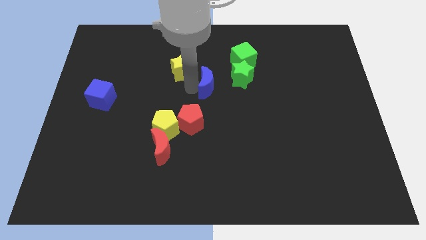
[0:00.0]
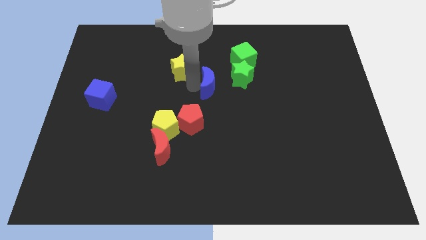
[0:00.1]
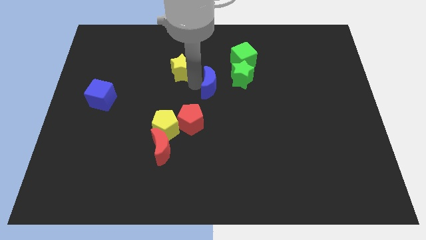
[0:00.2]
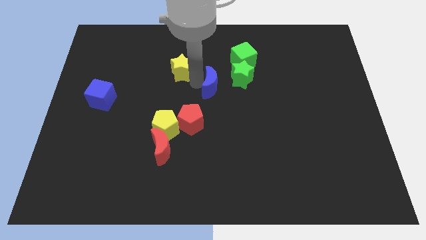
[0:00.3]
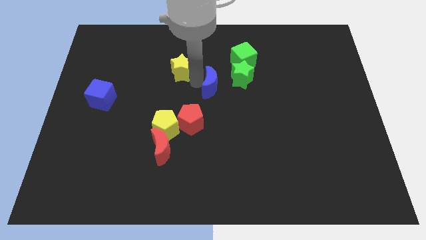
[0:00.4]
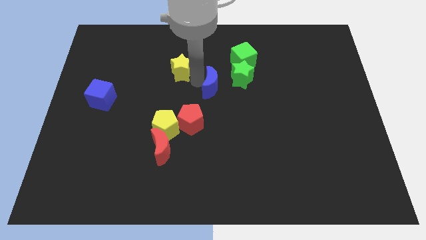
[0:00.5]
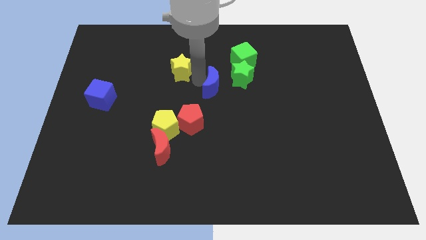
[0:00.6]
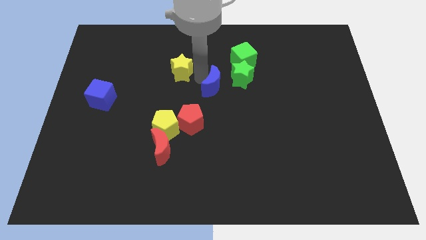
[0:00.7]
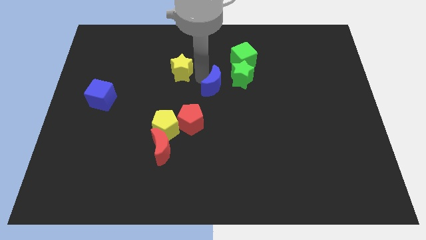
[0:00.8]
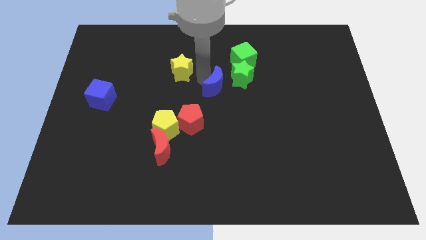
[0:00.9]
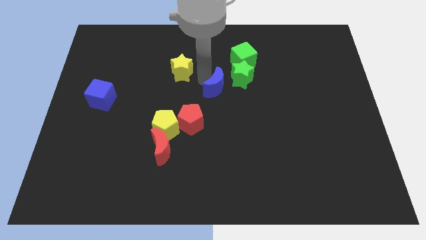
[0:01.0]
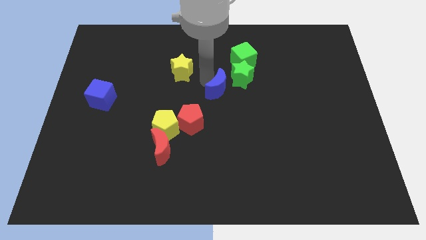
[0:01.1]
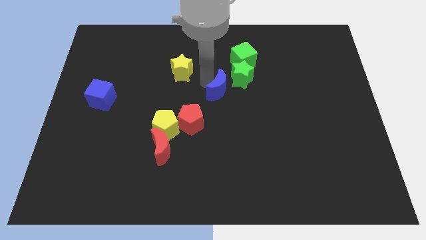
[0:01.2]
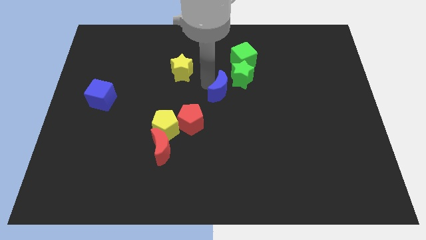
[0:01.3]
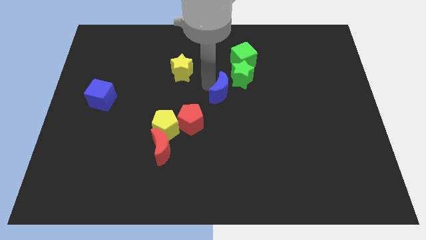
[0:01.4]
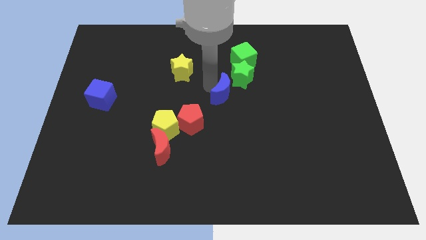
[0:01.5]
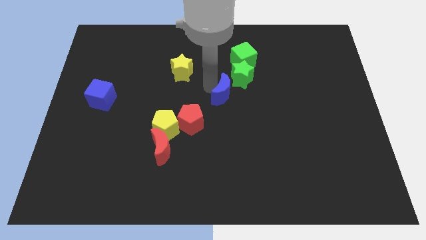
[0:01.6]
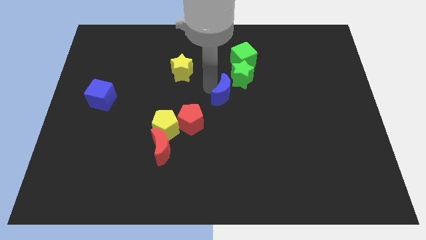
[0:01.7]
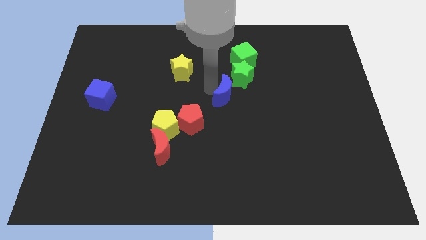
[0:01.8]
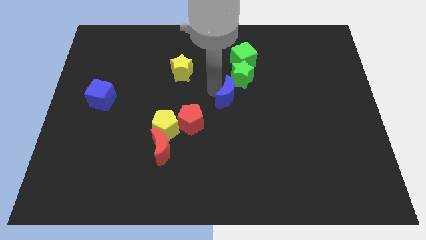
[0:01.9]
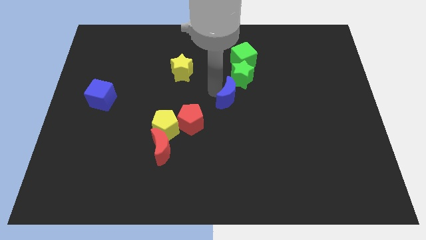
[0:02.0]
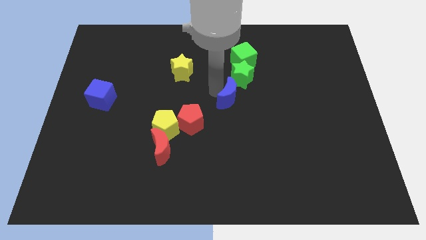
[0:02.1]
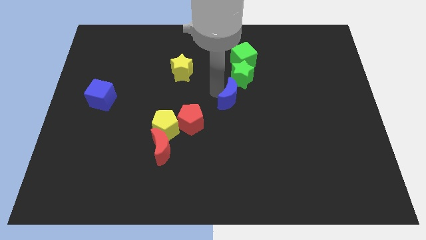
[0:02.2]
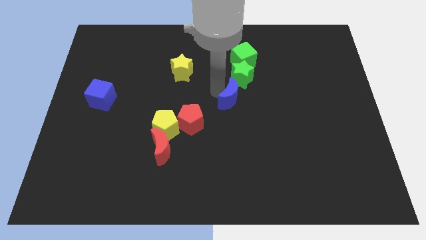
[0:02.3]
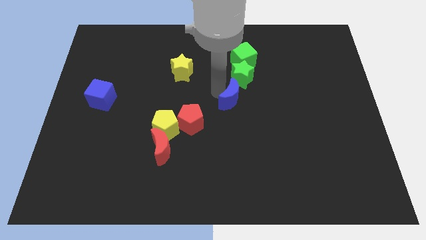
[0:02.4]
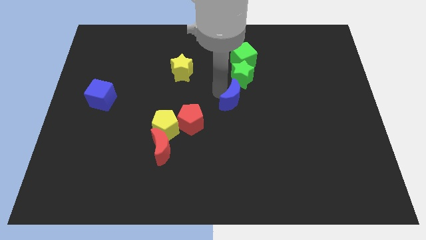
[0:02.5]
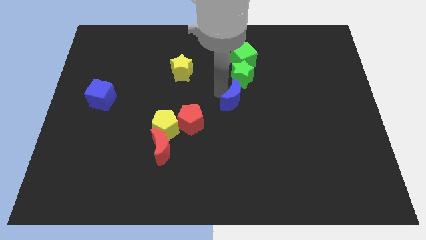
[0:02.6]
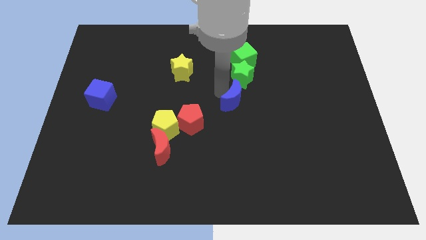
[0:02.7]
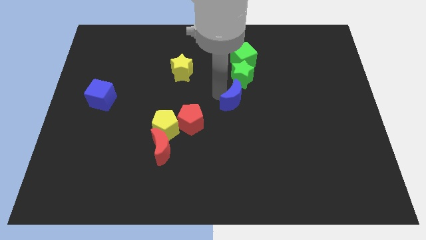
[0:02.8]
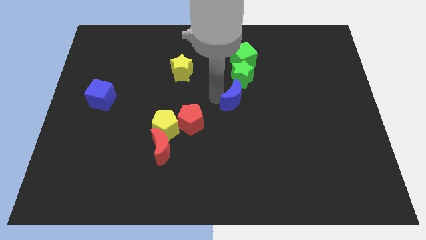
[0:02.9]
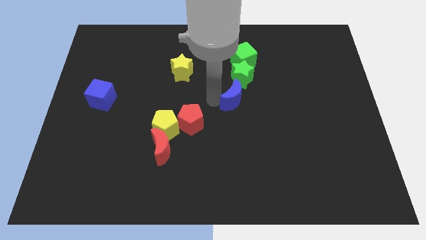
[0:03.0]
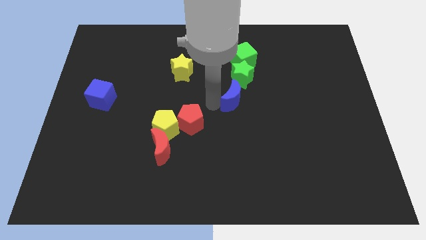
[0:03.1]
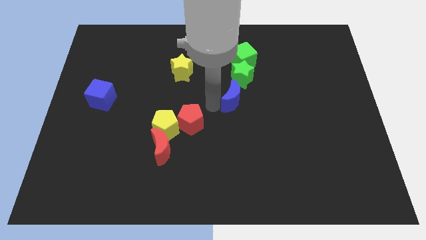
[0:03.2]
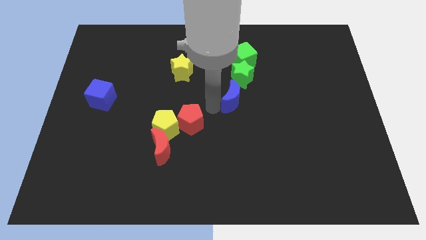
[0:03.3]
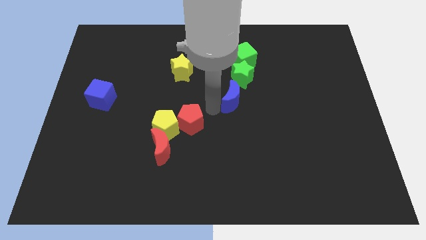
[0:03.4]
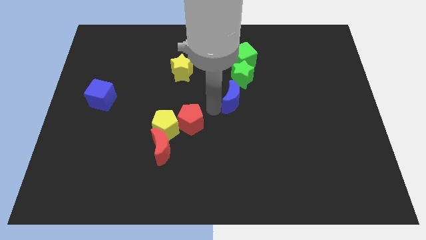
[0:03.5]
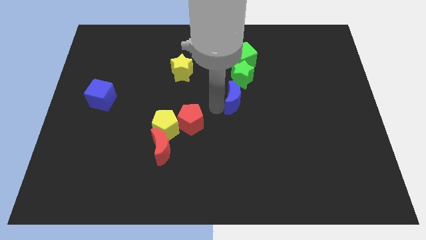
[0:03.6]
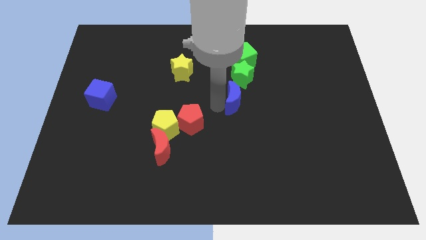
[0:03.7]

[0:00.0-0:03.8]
put the blue crescent parallel to the right of the blue cube

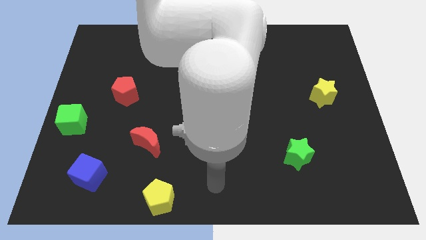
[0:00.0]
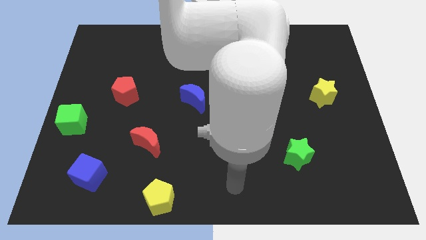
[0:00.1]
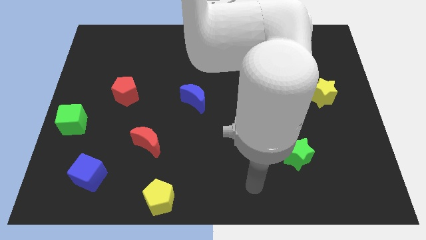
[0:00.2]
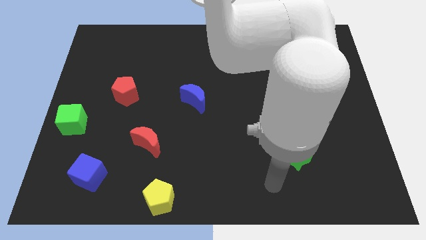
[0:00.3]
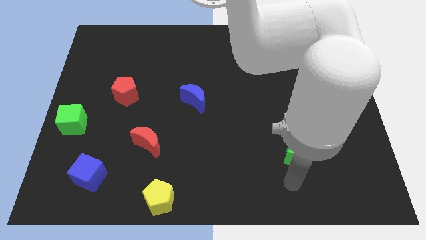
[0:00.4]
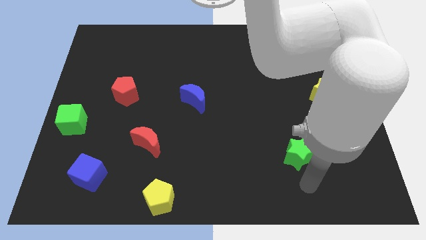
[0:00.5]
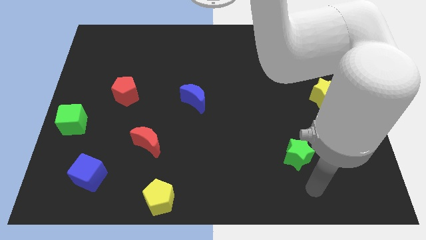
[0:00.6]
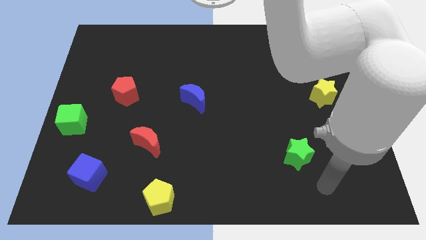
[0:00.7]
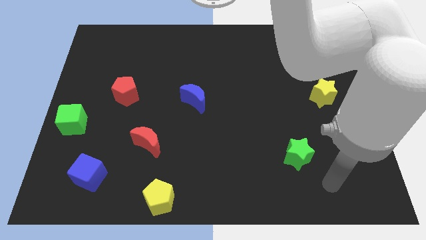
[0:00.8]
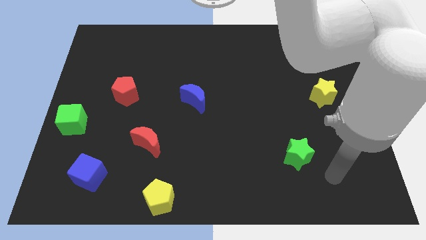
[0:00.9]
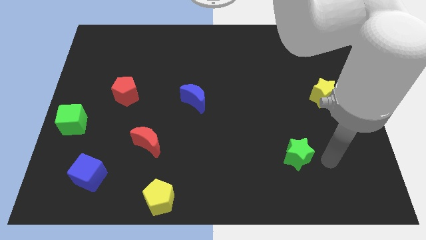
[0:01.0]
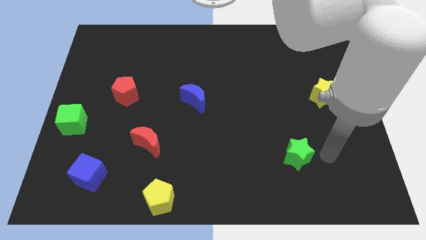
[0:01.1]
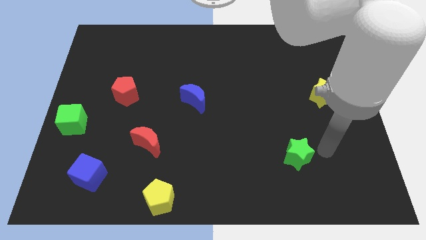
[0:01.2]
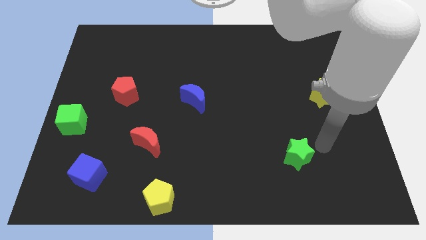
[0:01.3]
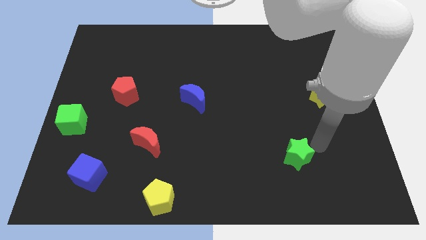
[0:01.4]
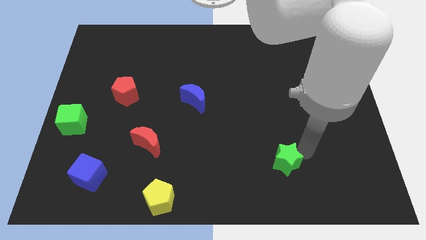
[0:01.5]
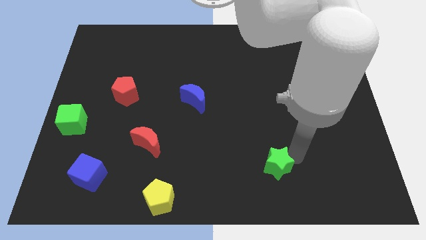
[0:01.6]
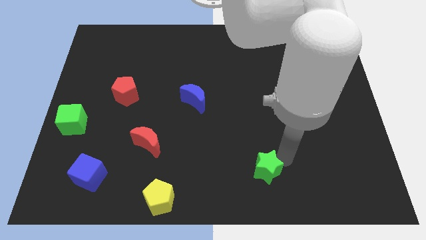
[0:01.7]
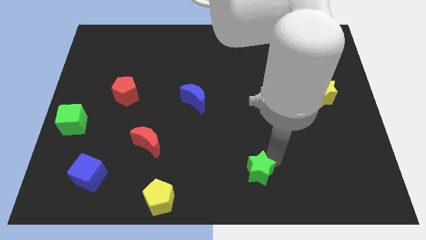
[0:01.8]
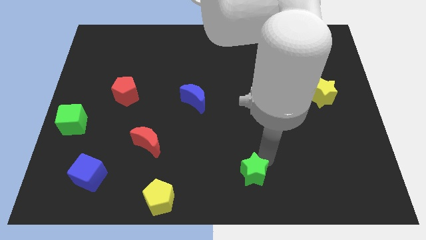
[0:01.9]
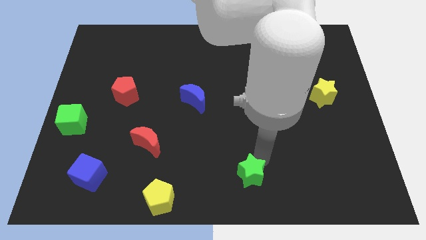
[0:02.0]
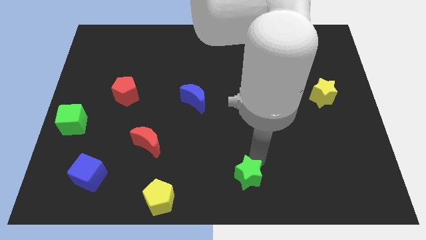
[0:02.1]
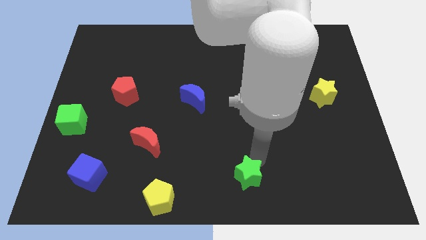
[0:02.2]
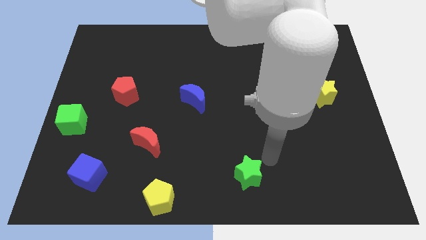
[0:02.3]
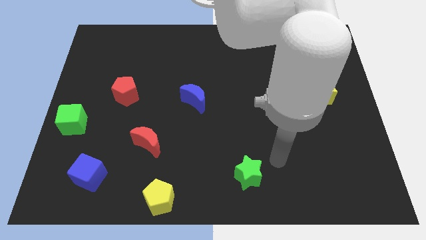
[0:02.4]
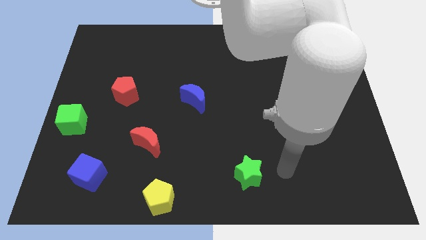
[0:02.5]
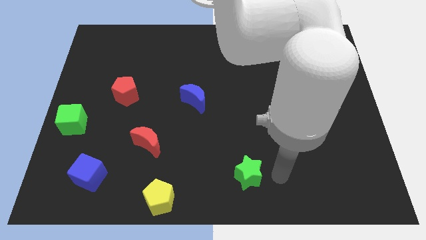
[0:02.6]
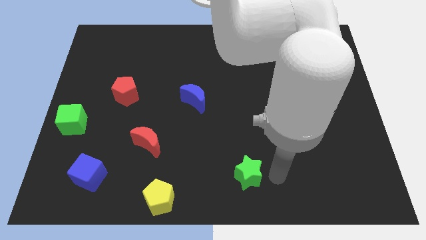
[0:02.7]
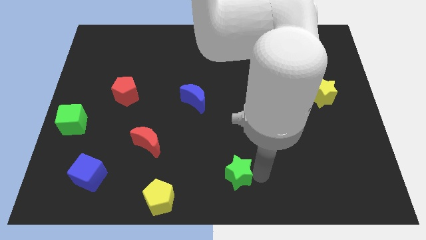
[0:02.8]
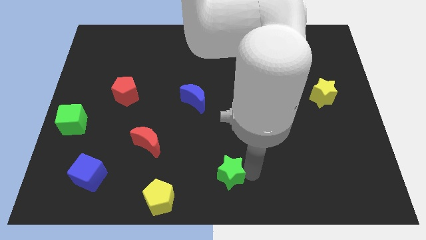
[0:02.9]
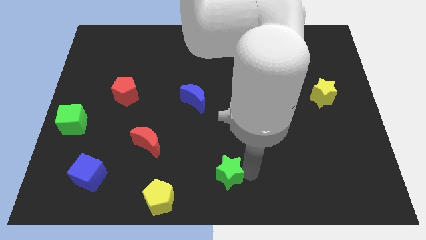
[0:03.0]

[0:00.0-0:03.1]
slide green star towards yellow pentagon

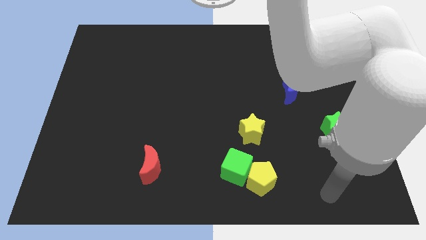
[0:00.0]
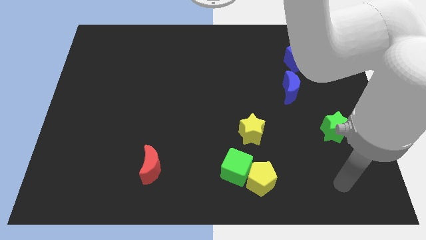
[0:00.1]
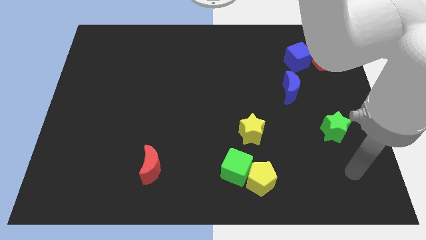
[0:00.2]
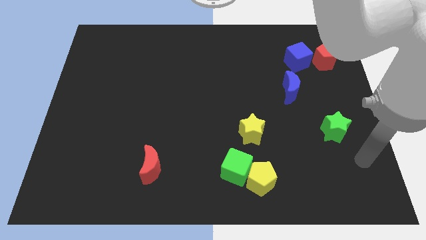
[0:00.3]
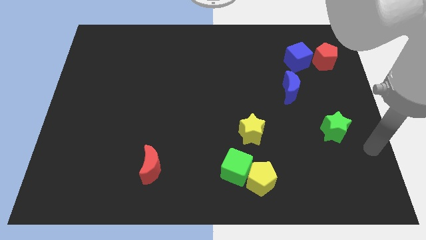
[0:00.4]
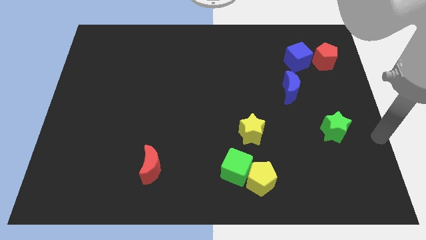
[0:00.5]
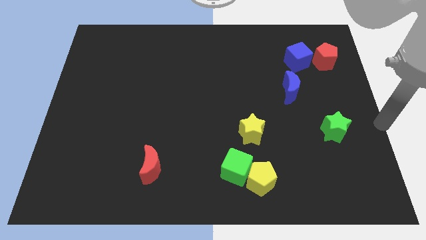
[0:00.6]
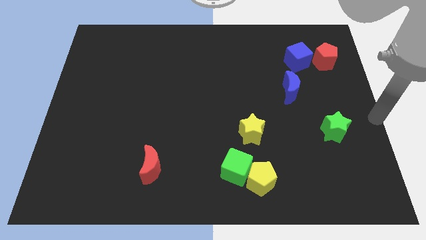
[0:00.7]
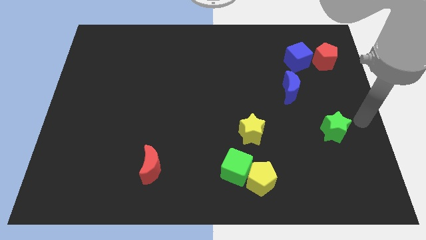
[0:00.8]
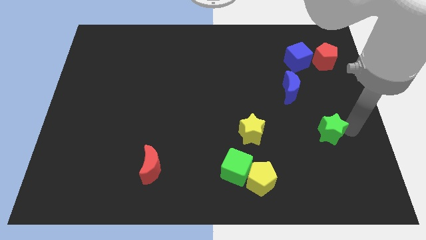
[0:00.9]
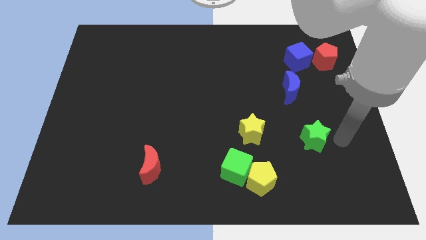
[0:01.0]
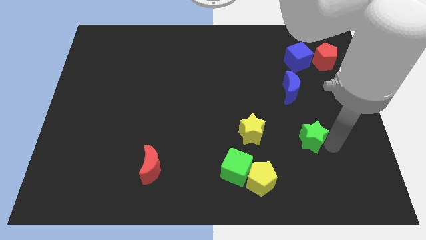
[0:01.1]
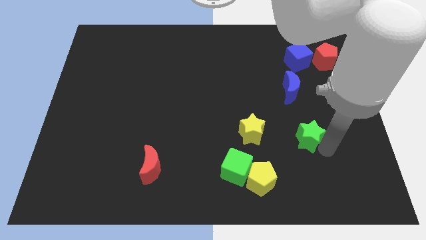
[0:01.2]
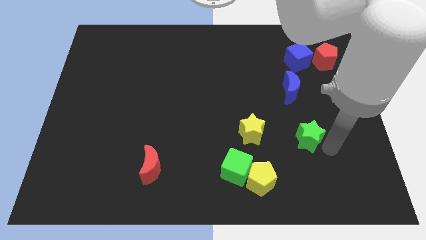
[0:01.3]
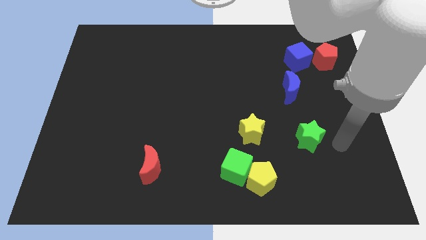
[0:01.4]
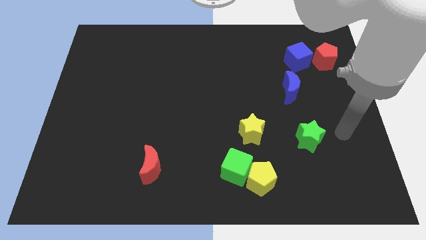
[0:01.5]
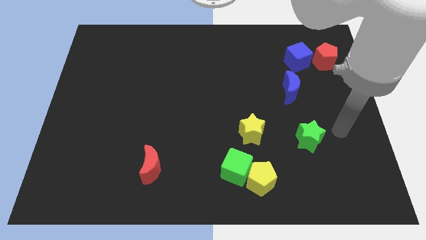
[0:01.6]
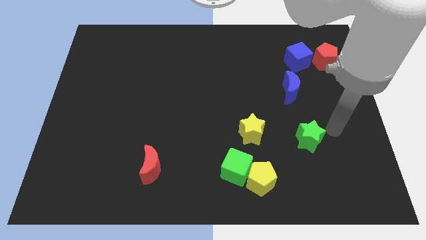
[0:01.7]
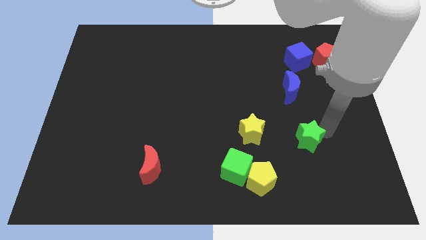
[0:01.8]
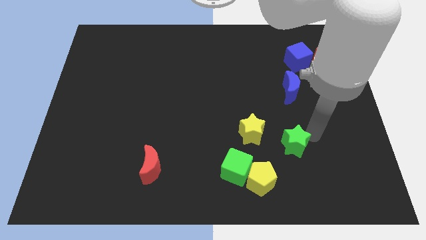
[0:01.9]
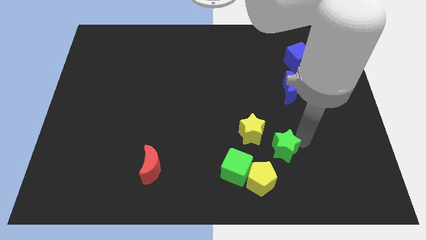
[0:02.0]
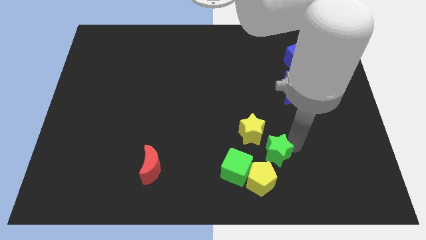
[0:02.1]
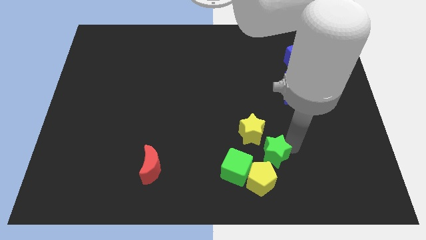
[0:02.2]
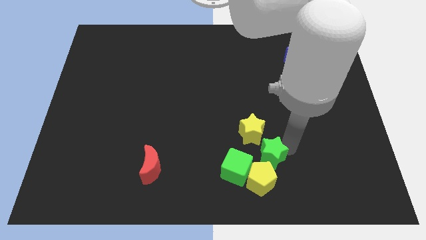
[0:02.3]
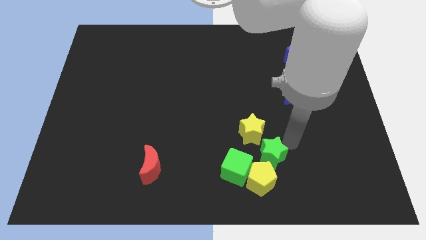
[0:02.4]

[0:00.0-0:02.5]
move green star above yellow pentagon
